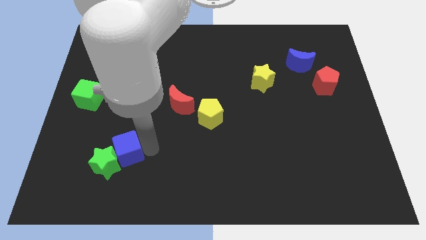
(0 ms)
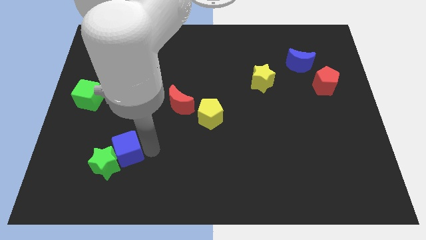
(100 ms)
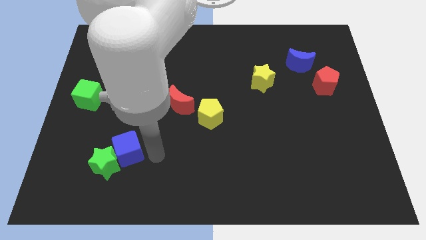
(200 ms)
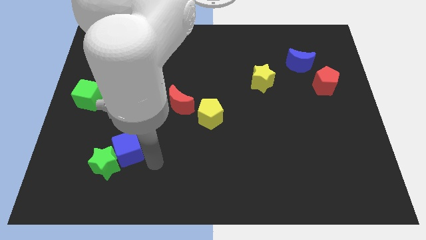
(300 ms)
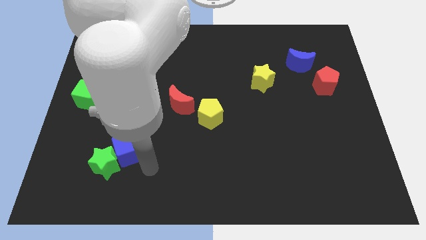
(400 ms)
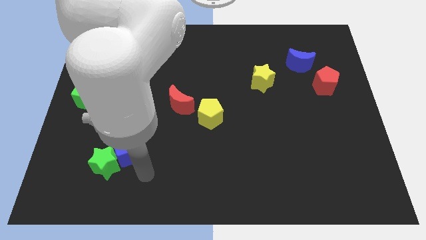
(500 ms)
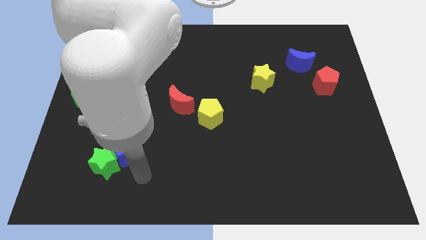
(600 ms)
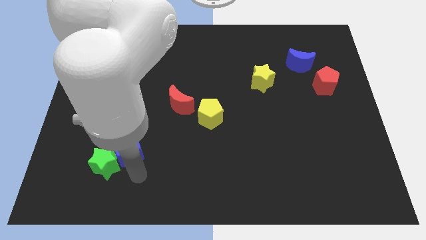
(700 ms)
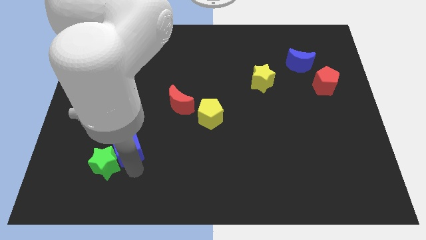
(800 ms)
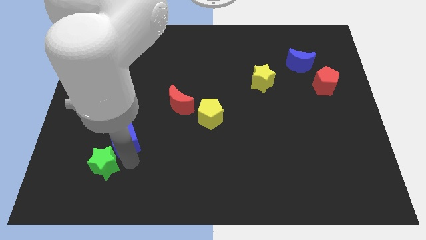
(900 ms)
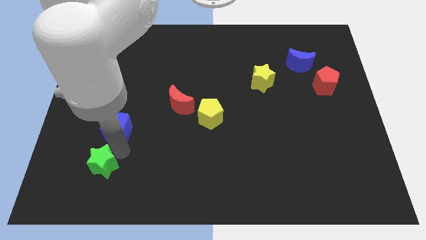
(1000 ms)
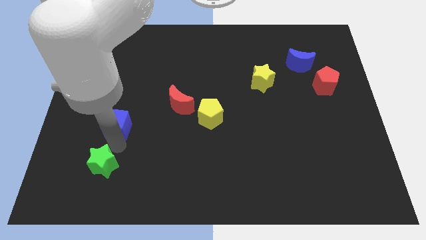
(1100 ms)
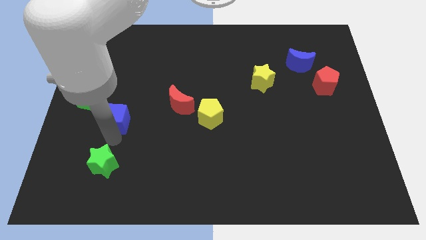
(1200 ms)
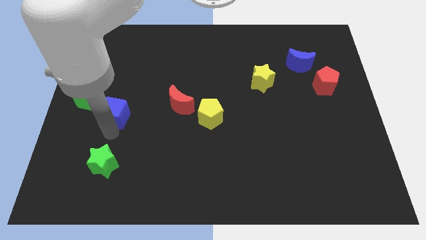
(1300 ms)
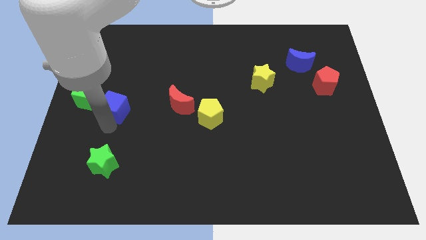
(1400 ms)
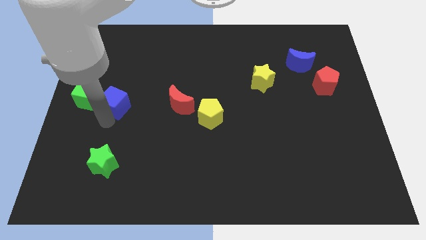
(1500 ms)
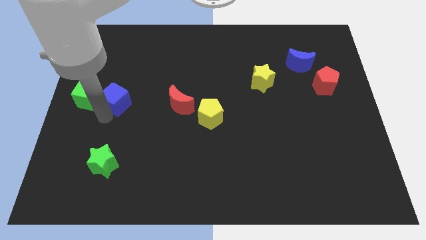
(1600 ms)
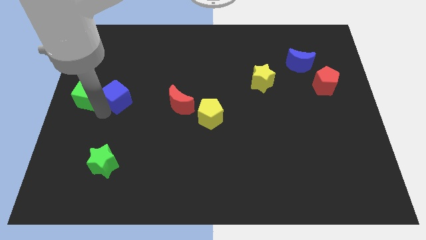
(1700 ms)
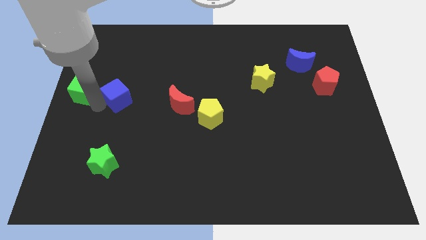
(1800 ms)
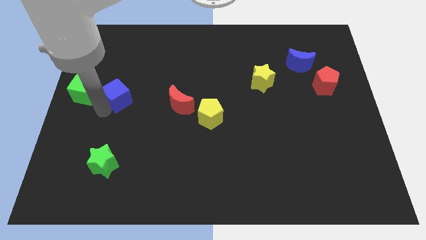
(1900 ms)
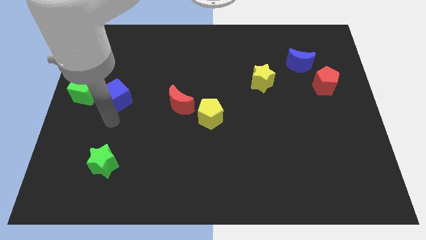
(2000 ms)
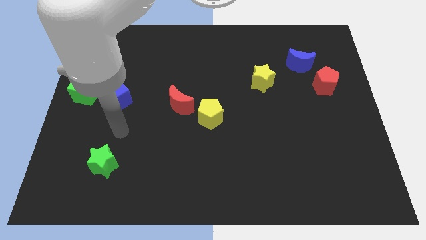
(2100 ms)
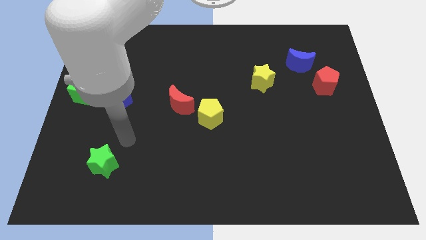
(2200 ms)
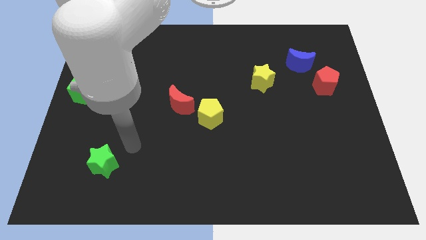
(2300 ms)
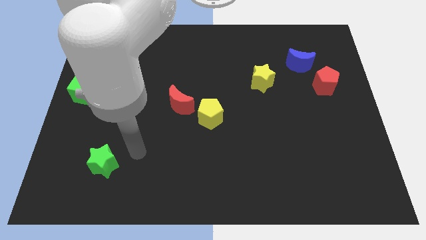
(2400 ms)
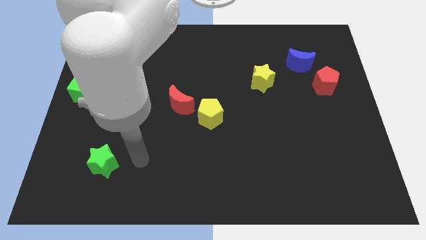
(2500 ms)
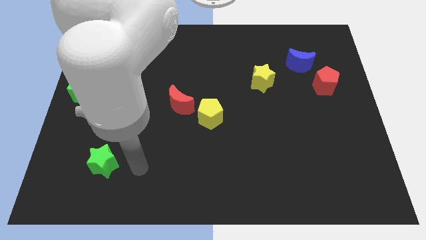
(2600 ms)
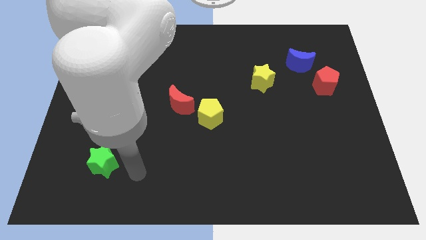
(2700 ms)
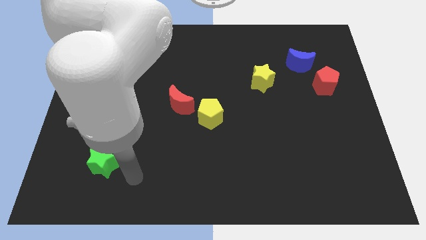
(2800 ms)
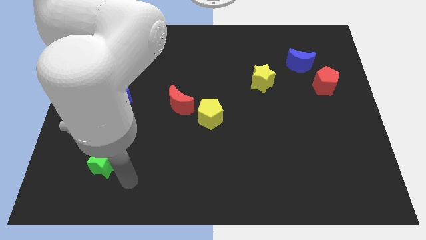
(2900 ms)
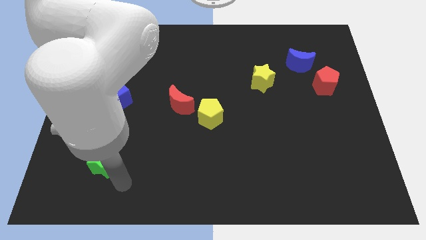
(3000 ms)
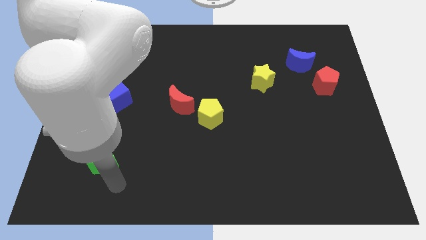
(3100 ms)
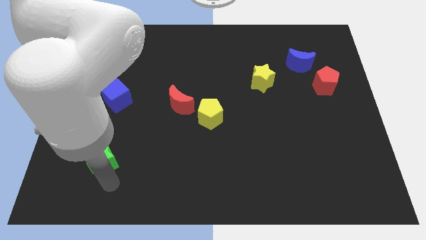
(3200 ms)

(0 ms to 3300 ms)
move the blue cube to the right of green cube

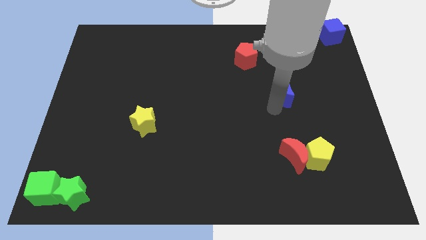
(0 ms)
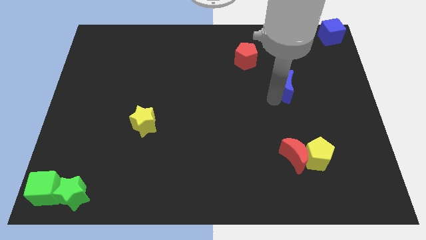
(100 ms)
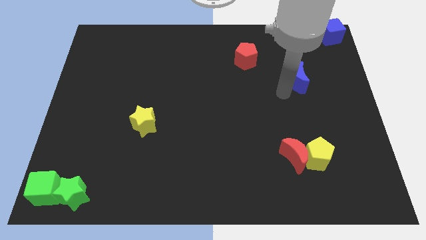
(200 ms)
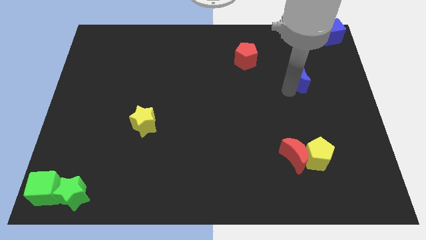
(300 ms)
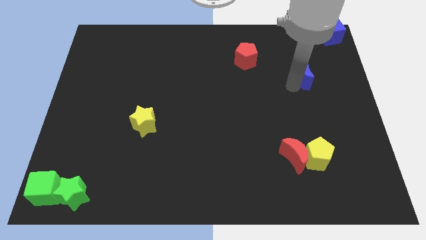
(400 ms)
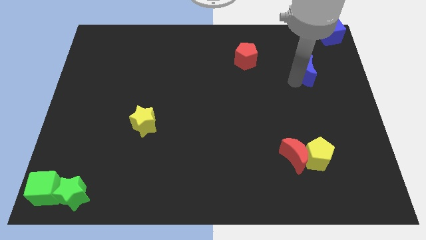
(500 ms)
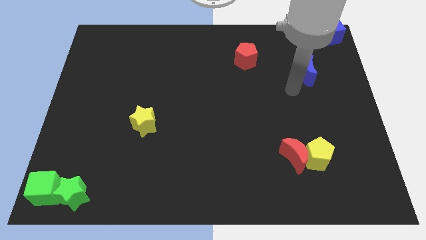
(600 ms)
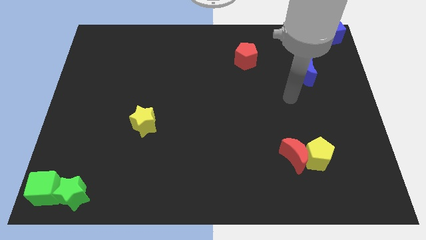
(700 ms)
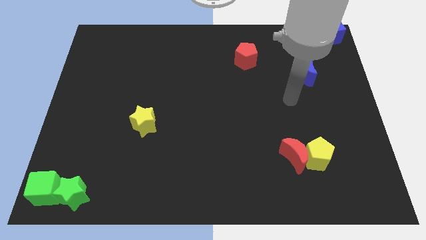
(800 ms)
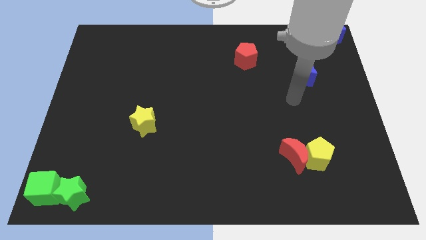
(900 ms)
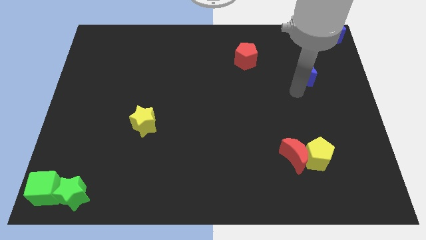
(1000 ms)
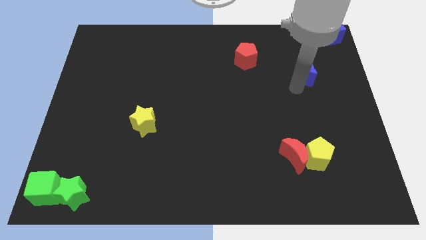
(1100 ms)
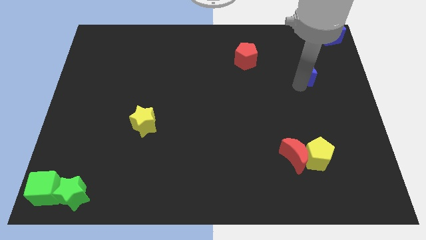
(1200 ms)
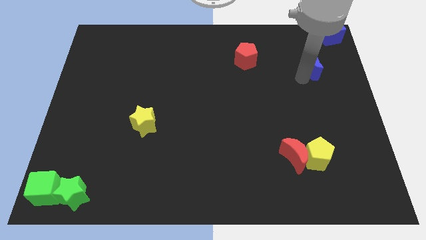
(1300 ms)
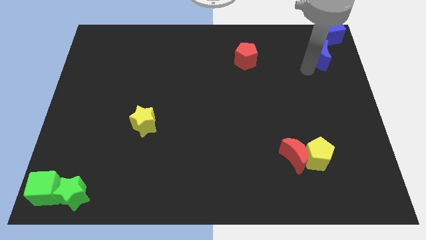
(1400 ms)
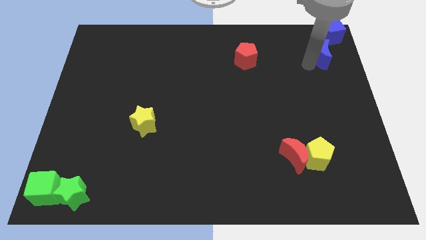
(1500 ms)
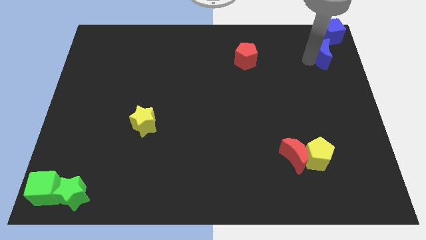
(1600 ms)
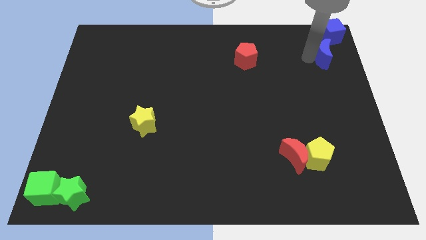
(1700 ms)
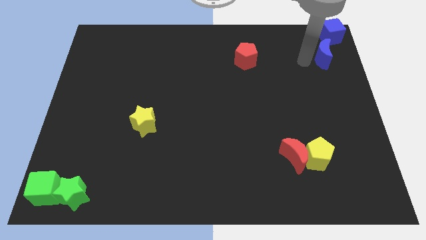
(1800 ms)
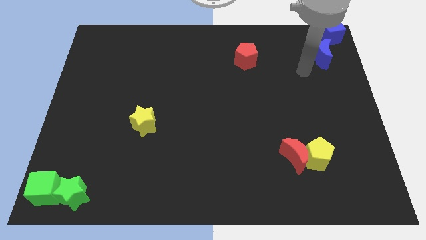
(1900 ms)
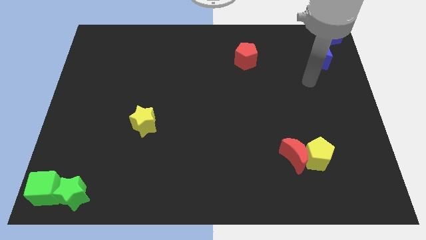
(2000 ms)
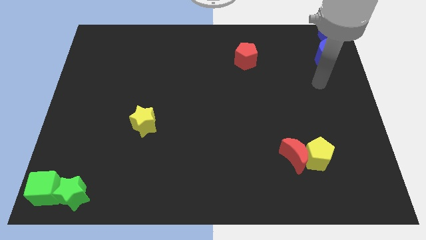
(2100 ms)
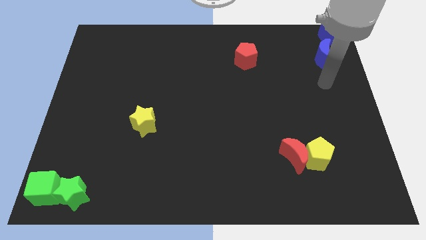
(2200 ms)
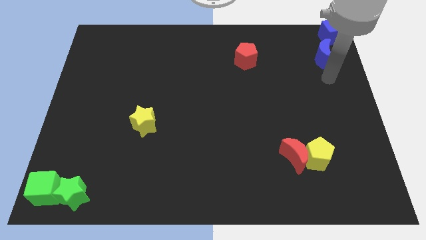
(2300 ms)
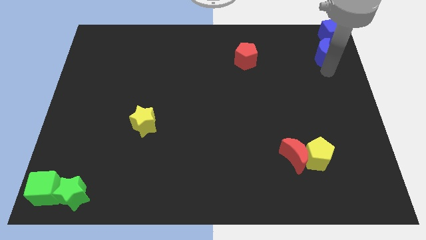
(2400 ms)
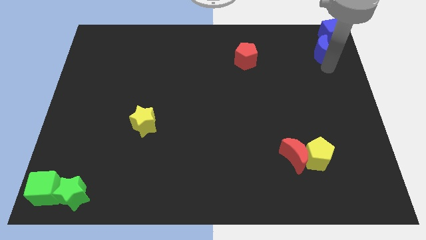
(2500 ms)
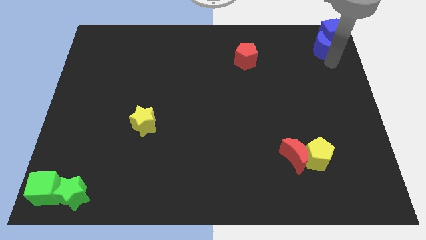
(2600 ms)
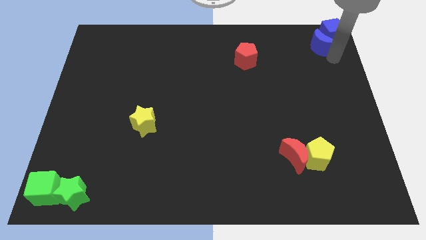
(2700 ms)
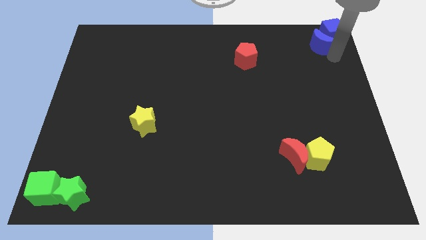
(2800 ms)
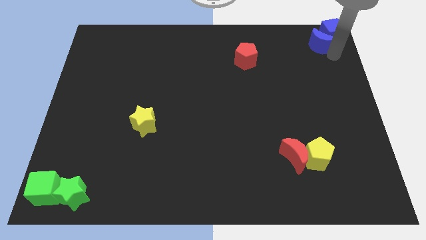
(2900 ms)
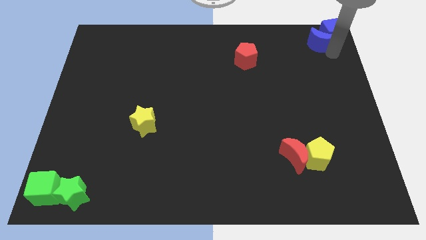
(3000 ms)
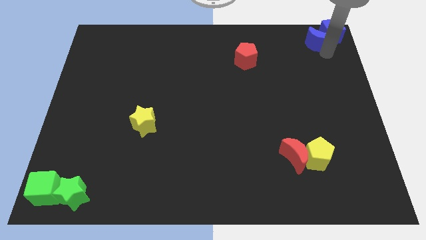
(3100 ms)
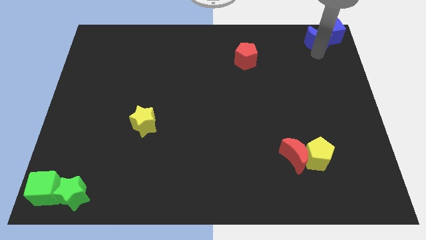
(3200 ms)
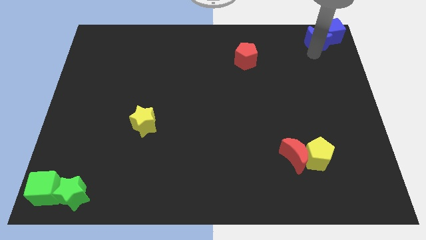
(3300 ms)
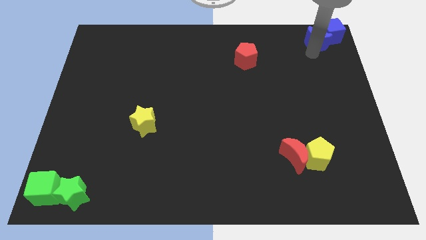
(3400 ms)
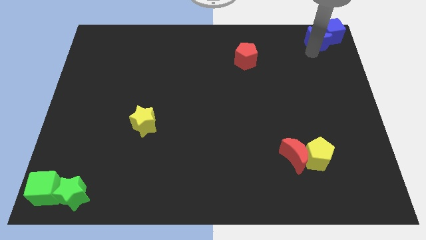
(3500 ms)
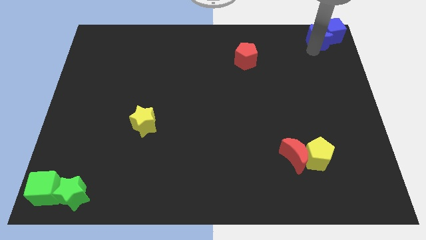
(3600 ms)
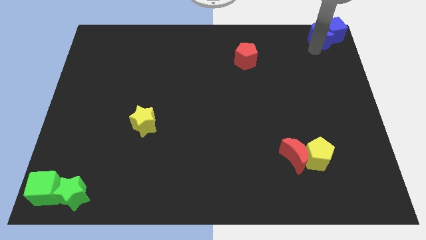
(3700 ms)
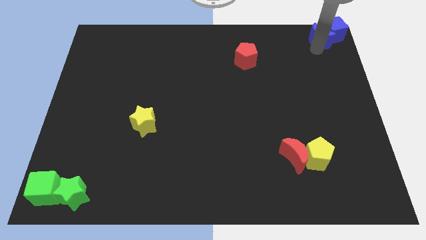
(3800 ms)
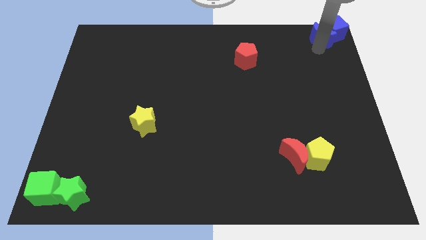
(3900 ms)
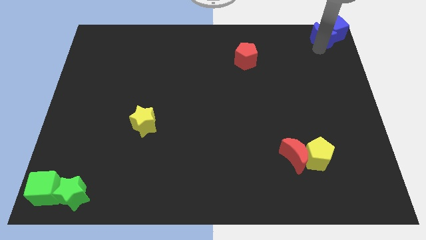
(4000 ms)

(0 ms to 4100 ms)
slide the blue moon into the blue cube

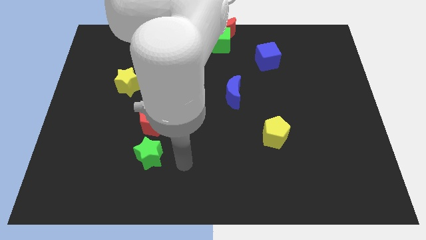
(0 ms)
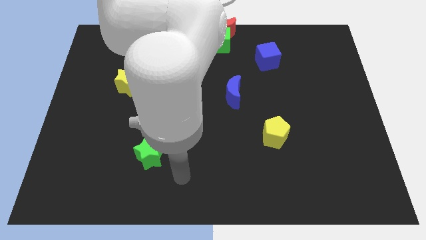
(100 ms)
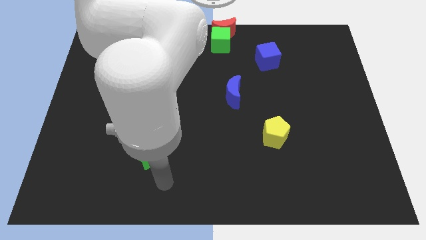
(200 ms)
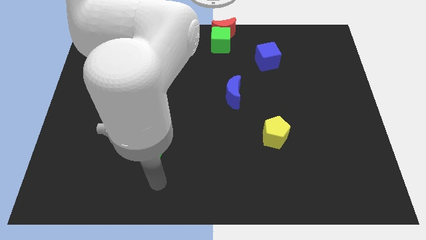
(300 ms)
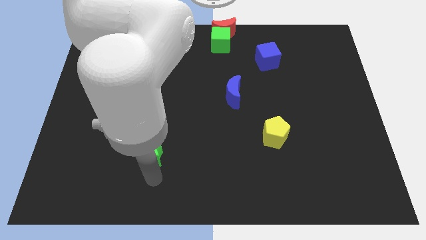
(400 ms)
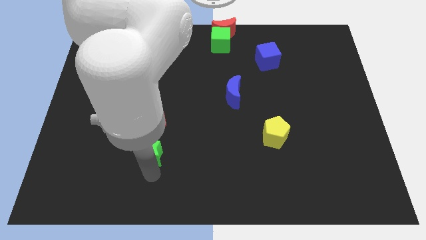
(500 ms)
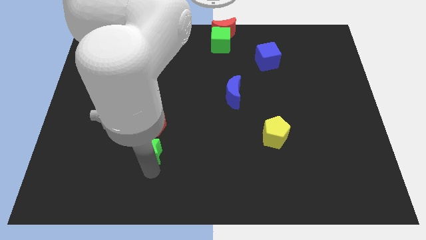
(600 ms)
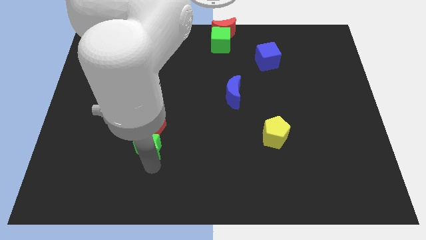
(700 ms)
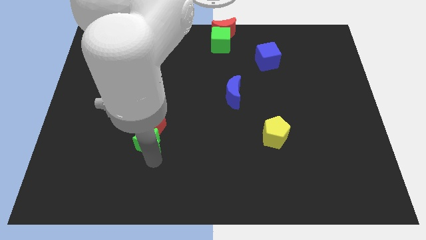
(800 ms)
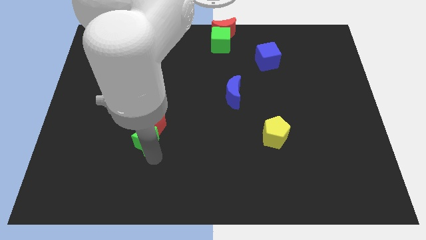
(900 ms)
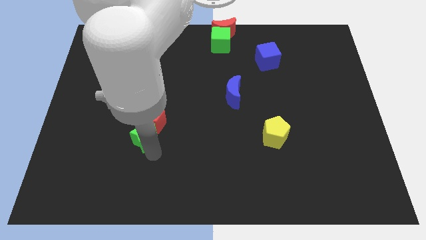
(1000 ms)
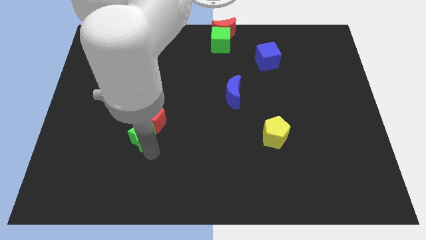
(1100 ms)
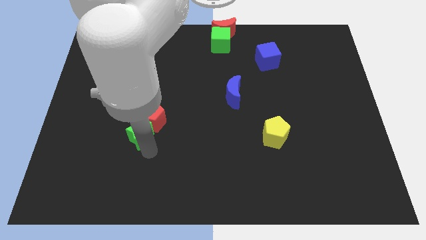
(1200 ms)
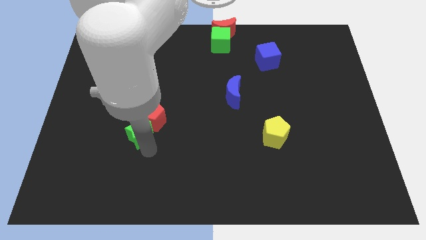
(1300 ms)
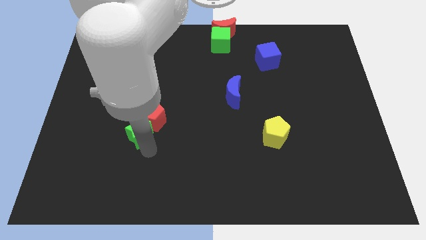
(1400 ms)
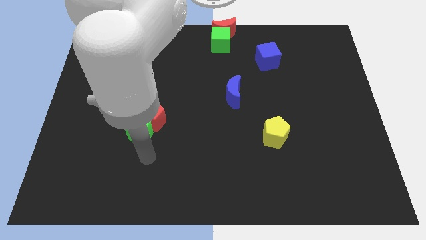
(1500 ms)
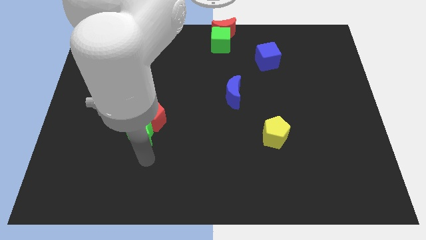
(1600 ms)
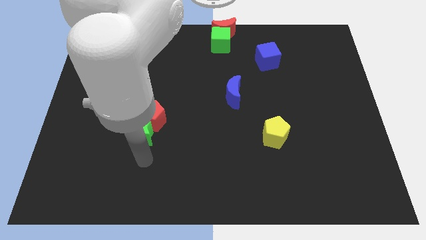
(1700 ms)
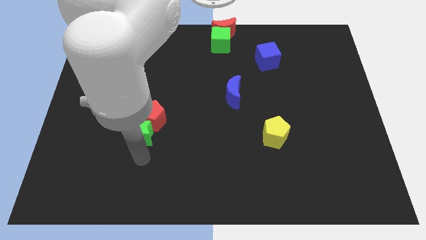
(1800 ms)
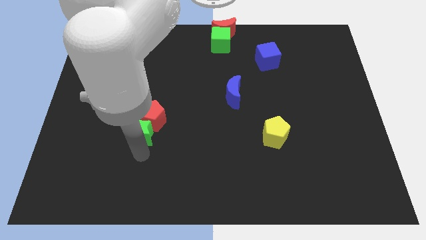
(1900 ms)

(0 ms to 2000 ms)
move the green star towards the red pentagon
